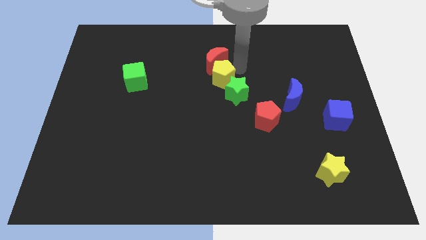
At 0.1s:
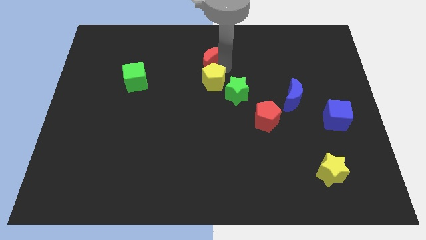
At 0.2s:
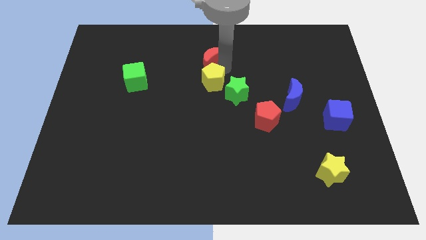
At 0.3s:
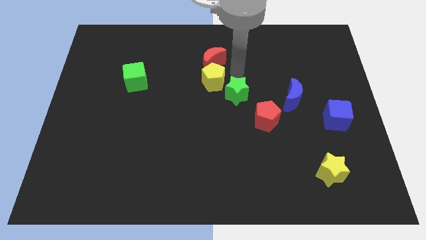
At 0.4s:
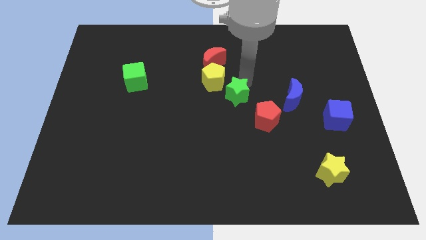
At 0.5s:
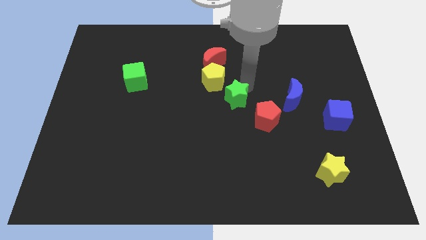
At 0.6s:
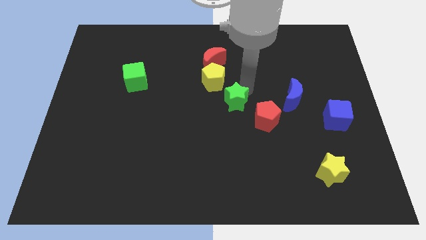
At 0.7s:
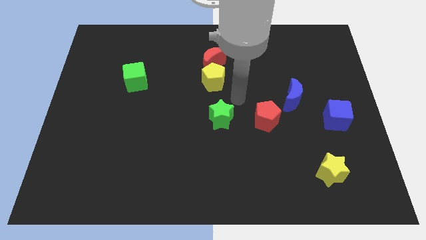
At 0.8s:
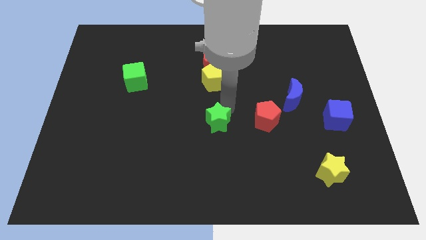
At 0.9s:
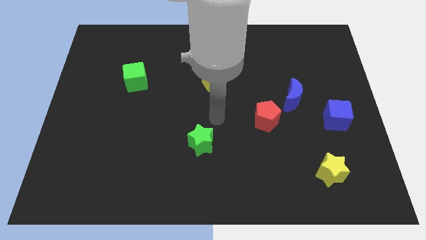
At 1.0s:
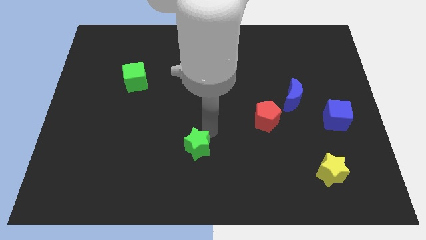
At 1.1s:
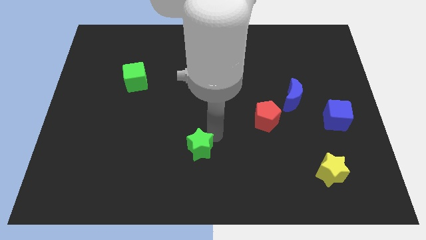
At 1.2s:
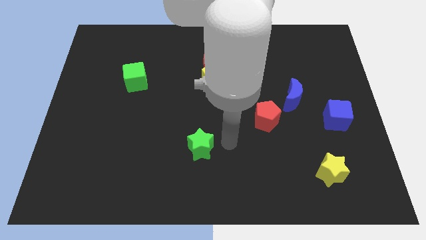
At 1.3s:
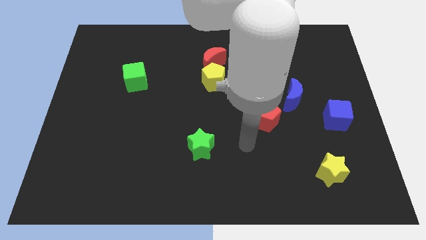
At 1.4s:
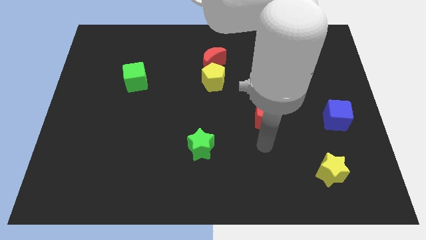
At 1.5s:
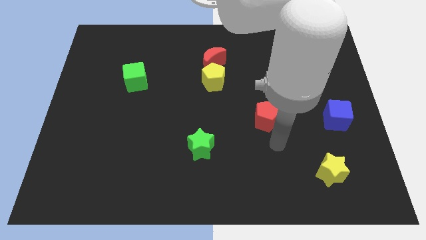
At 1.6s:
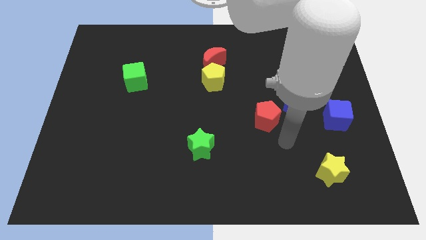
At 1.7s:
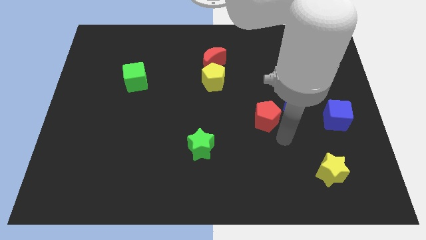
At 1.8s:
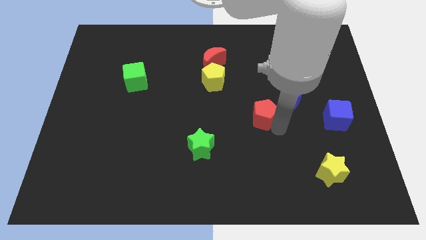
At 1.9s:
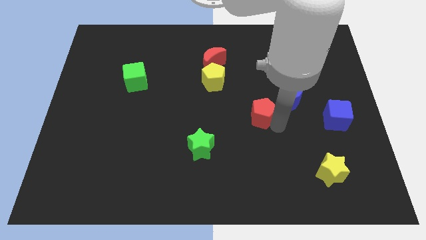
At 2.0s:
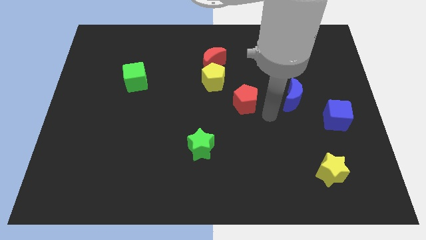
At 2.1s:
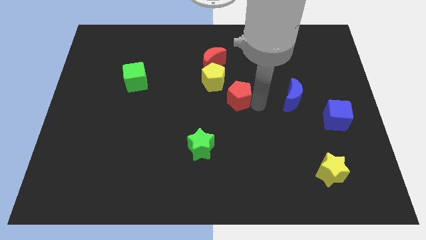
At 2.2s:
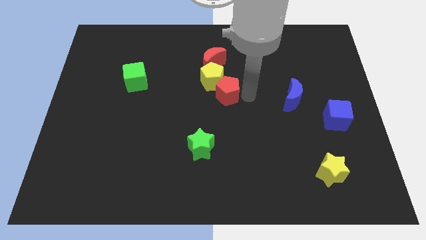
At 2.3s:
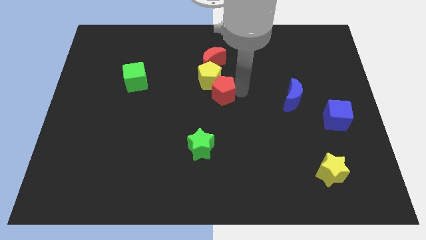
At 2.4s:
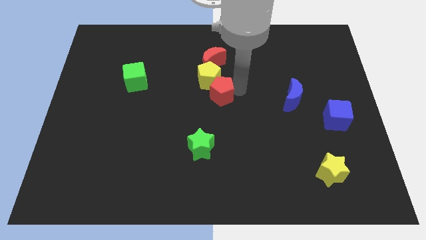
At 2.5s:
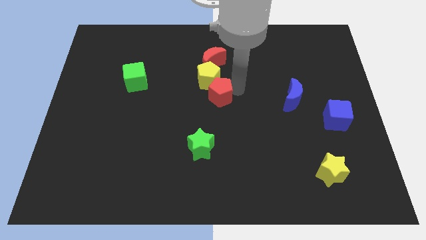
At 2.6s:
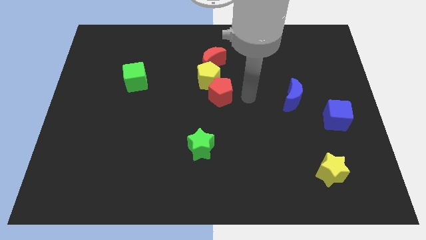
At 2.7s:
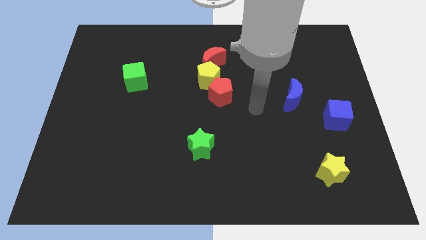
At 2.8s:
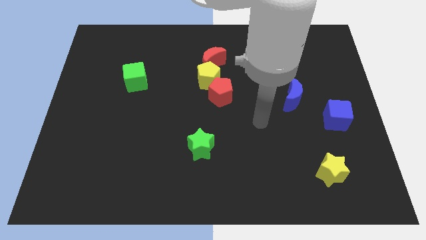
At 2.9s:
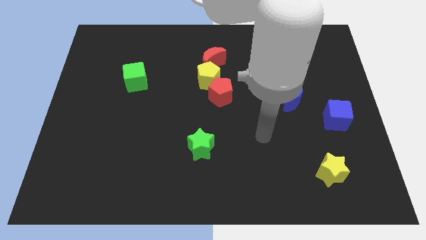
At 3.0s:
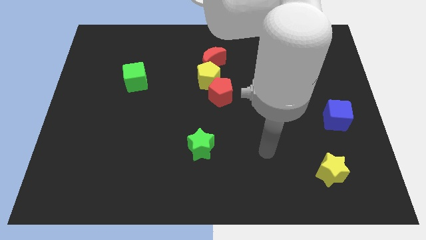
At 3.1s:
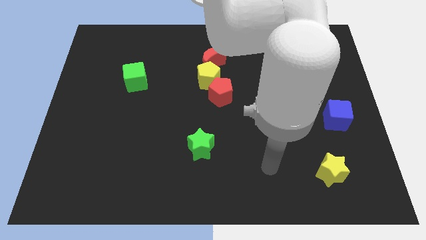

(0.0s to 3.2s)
separate the green star from group of blocks

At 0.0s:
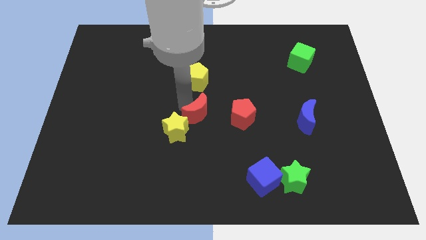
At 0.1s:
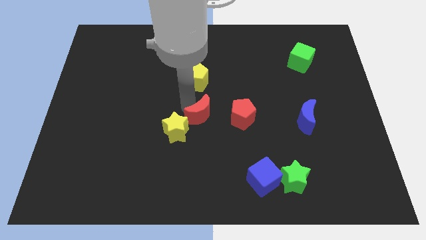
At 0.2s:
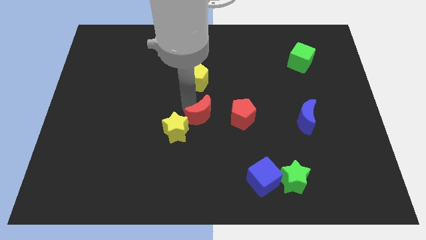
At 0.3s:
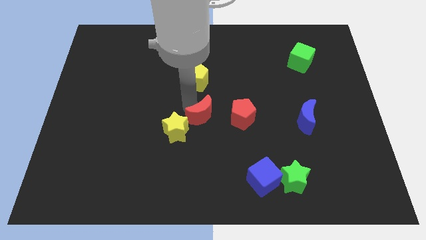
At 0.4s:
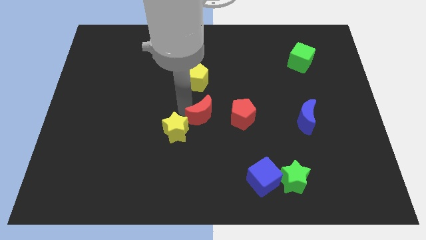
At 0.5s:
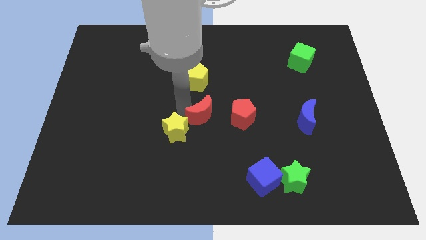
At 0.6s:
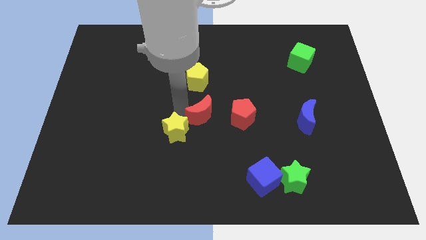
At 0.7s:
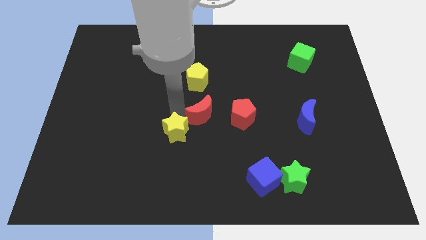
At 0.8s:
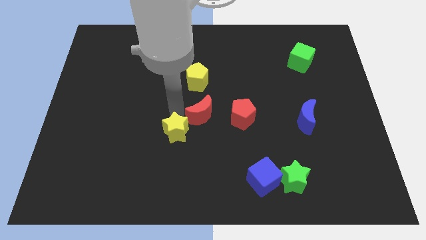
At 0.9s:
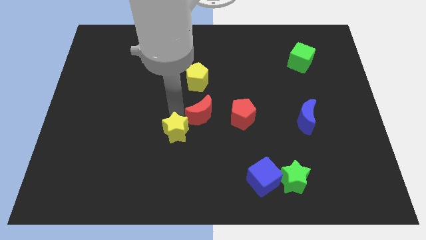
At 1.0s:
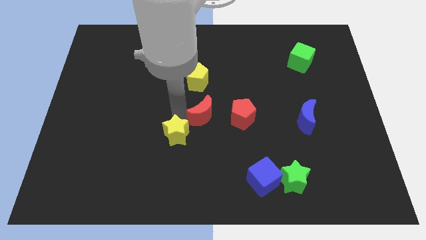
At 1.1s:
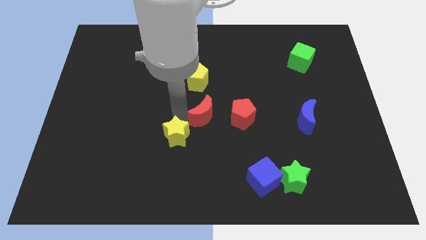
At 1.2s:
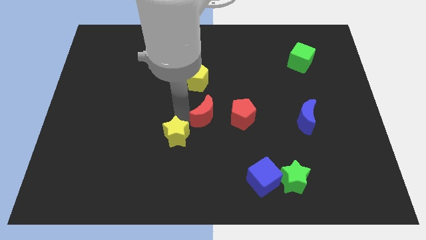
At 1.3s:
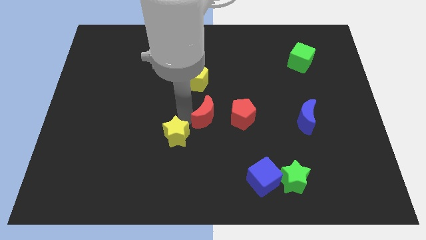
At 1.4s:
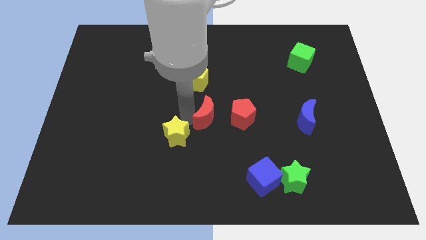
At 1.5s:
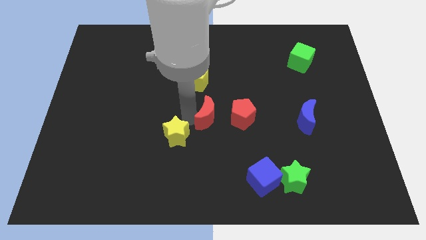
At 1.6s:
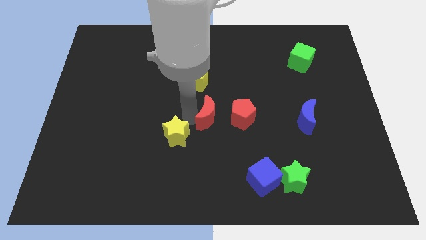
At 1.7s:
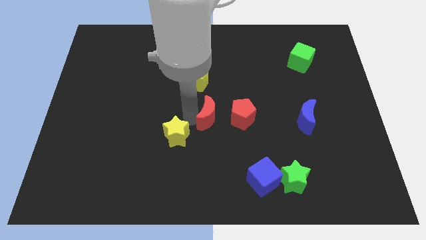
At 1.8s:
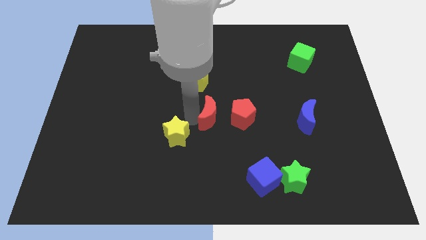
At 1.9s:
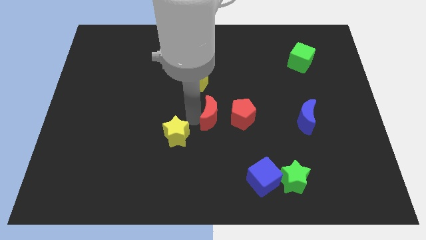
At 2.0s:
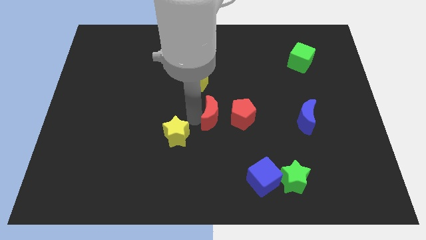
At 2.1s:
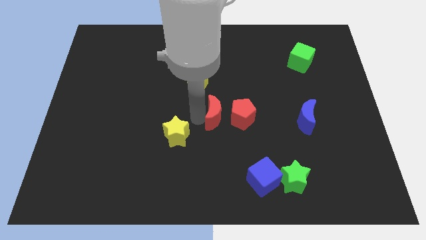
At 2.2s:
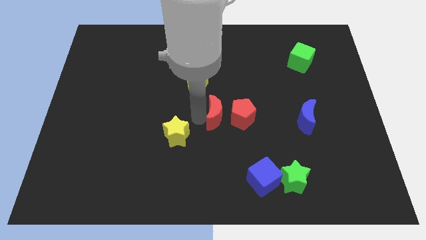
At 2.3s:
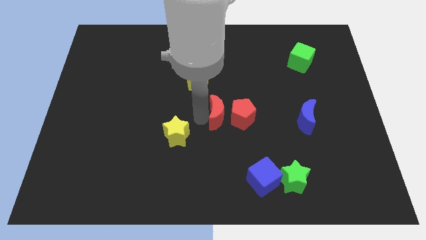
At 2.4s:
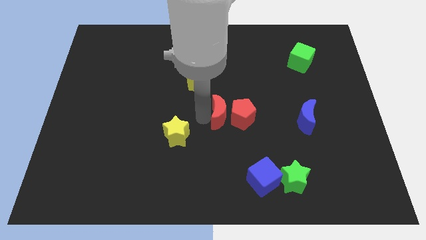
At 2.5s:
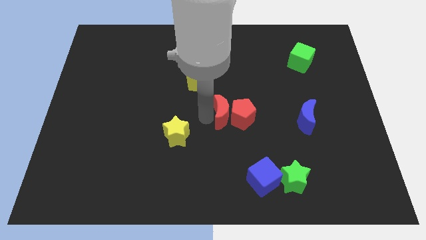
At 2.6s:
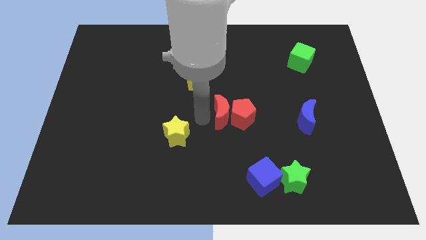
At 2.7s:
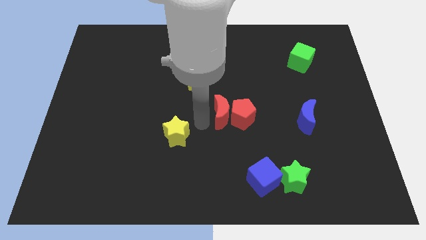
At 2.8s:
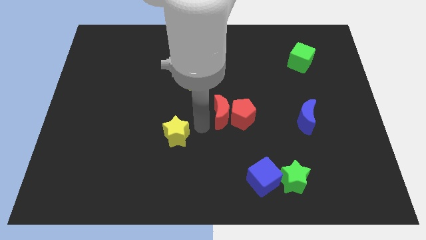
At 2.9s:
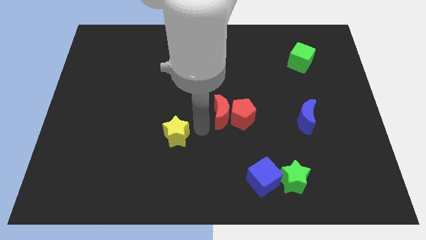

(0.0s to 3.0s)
place the red crescent towards the centre of the board

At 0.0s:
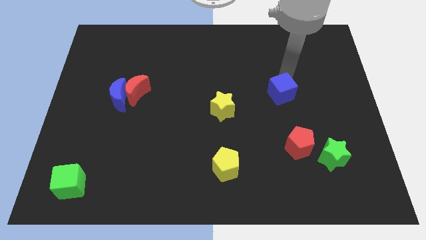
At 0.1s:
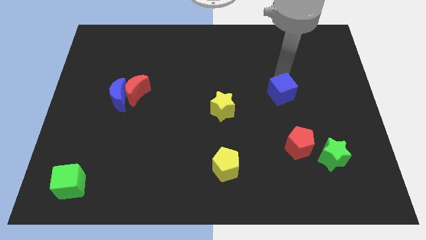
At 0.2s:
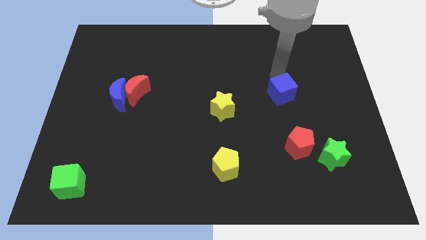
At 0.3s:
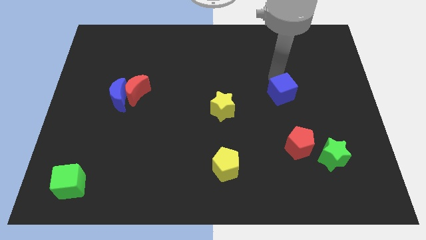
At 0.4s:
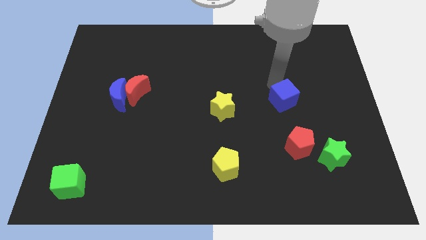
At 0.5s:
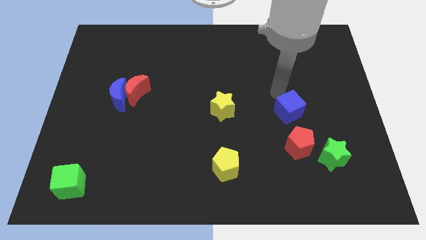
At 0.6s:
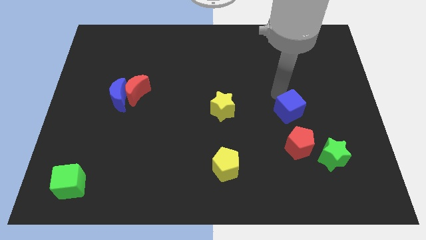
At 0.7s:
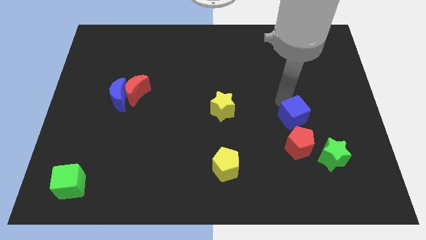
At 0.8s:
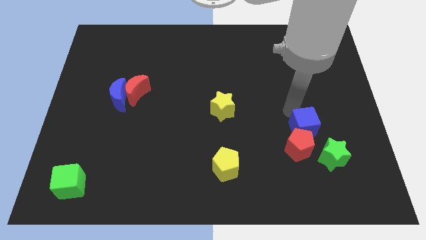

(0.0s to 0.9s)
push the blue cube above the red pentagon

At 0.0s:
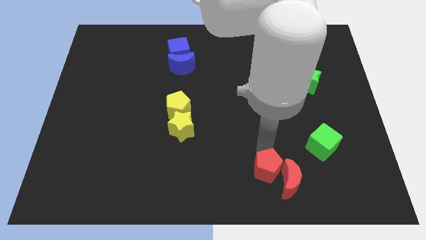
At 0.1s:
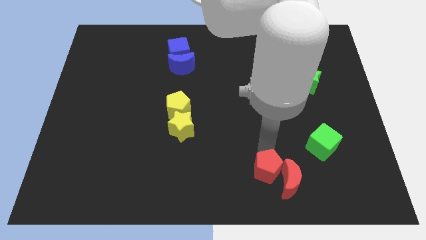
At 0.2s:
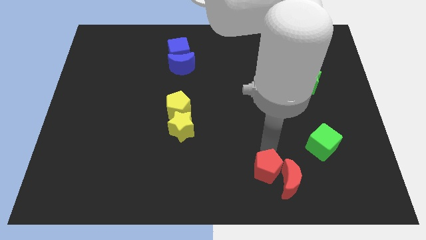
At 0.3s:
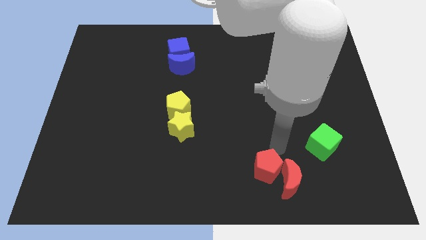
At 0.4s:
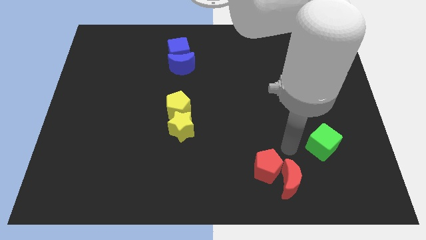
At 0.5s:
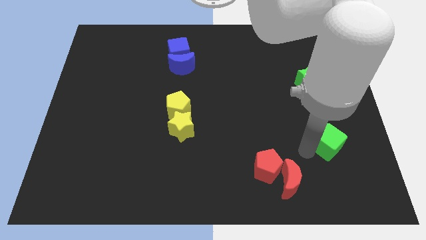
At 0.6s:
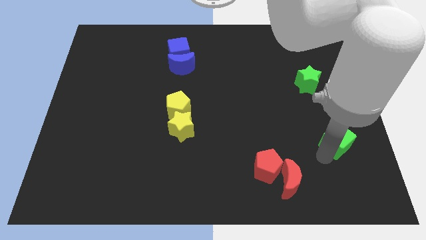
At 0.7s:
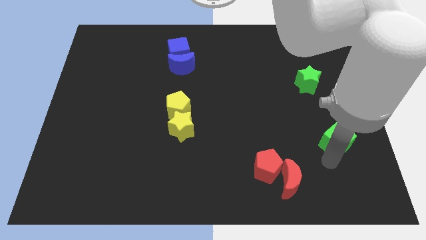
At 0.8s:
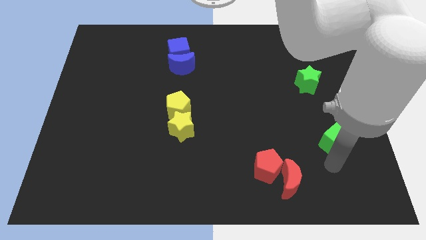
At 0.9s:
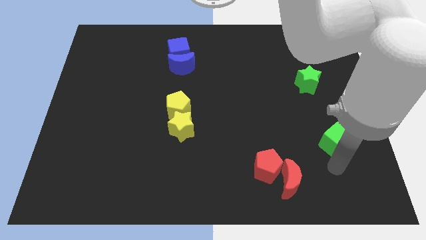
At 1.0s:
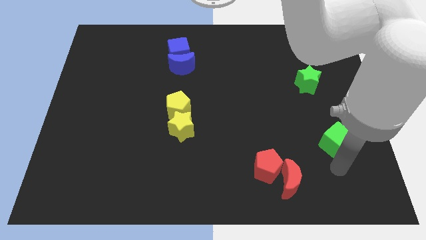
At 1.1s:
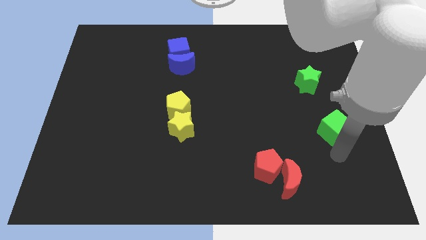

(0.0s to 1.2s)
slightly push the green cube to the right of the board

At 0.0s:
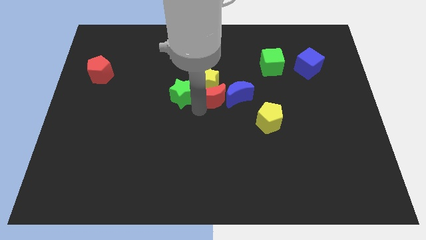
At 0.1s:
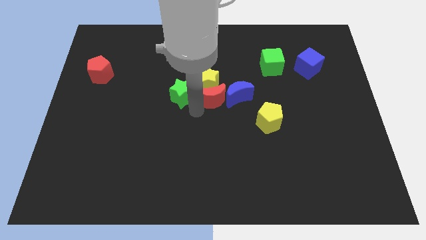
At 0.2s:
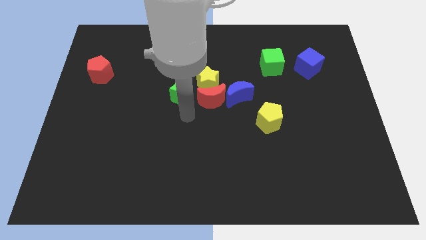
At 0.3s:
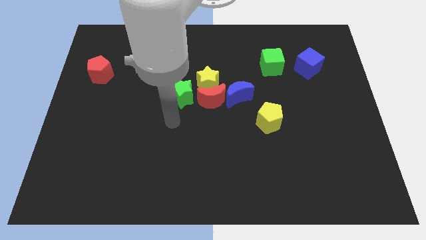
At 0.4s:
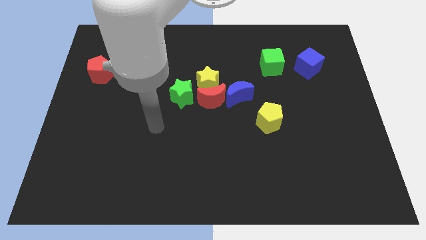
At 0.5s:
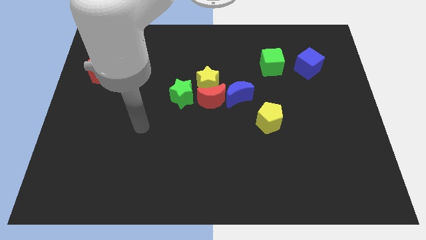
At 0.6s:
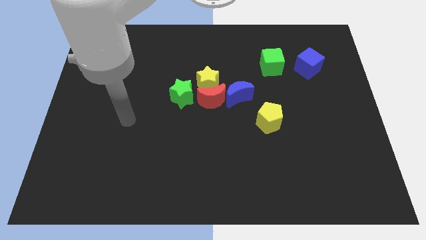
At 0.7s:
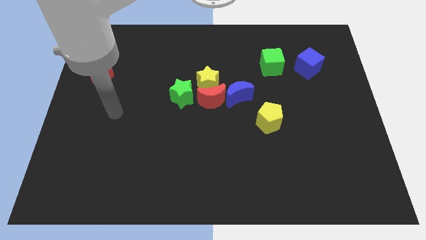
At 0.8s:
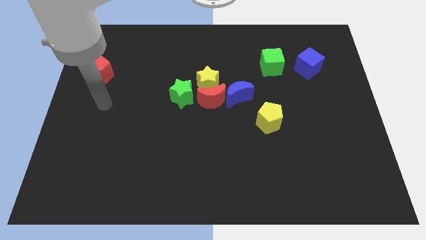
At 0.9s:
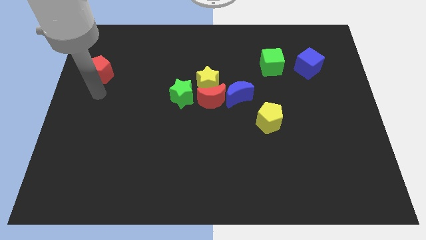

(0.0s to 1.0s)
move the arm away to the bottom of the red pentagon
